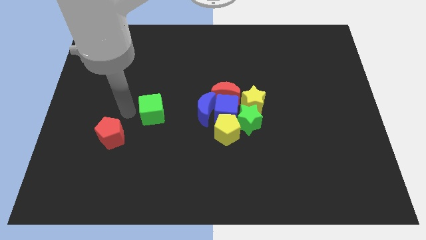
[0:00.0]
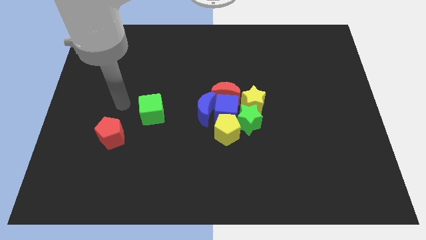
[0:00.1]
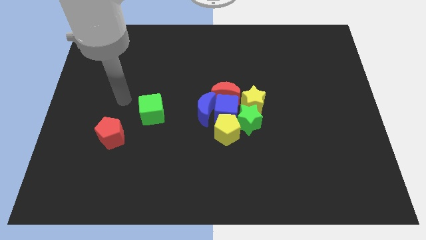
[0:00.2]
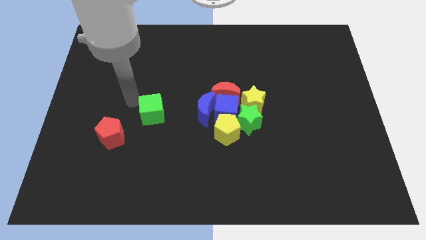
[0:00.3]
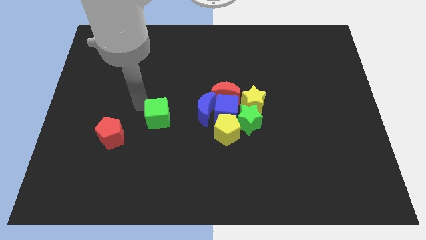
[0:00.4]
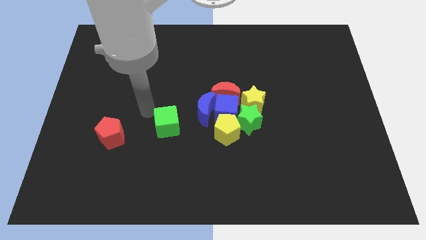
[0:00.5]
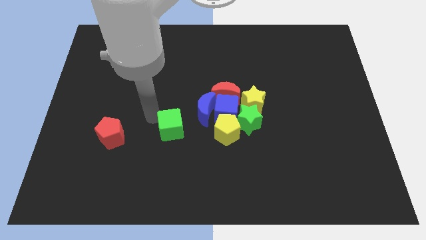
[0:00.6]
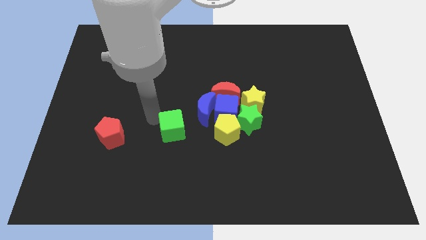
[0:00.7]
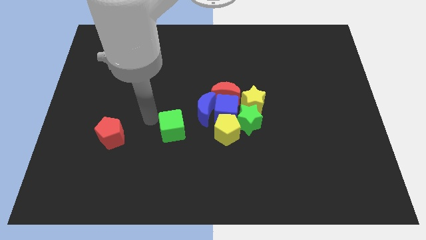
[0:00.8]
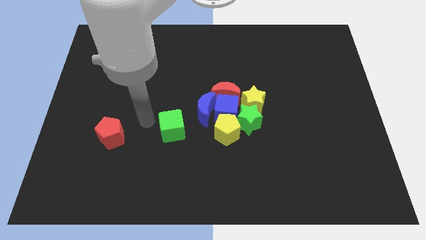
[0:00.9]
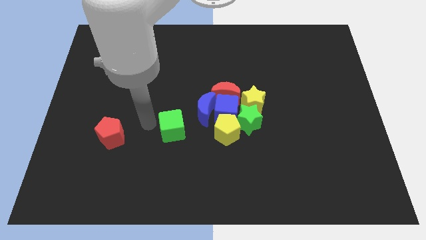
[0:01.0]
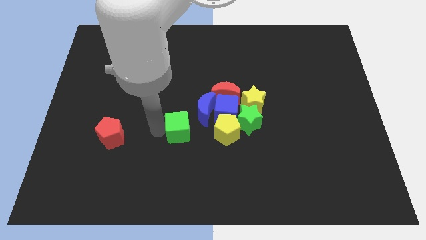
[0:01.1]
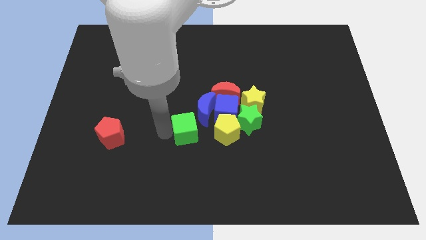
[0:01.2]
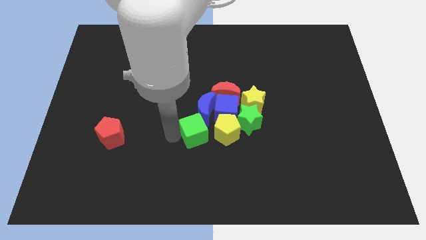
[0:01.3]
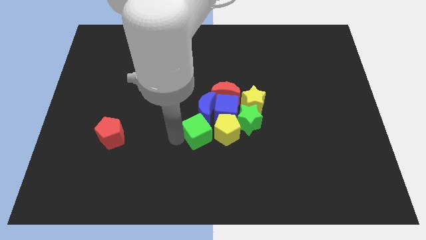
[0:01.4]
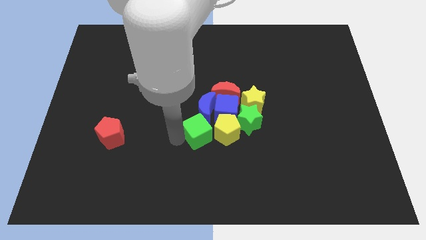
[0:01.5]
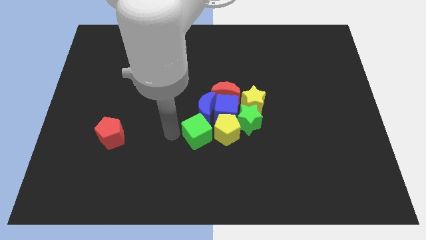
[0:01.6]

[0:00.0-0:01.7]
push the green cube left to the yellow pentagon

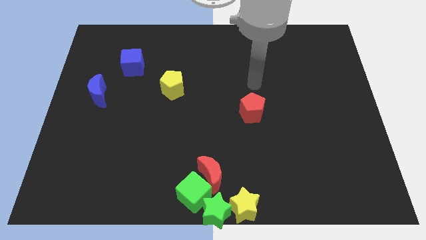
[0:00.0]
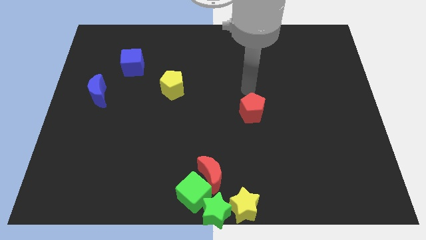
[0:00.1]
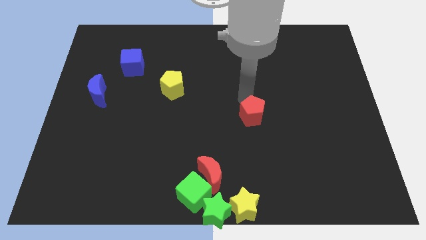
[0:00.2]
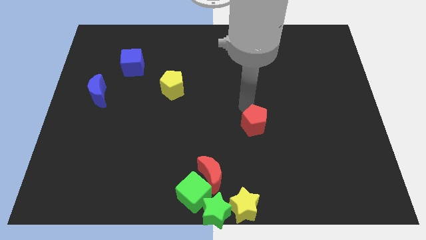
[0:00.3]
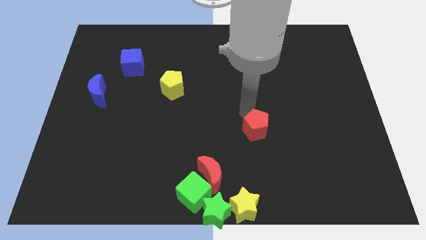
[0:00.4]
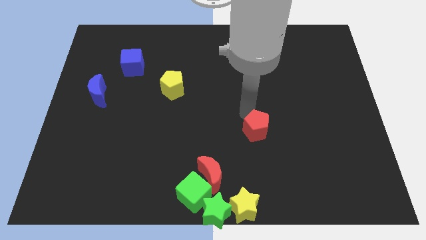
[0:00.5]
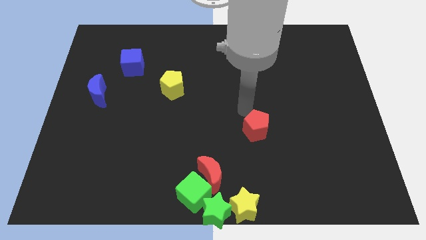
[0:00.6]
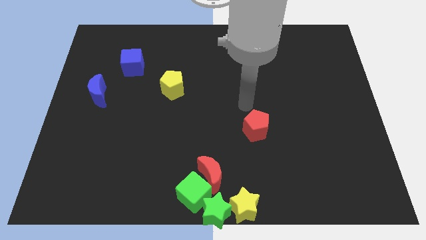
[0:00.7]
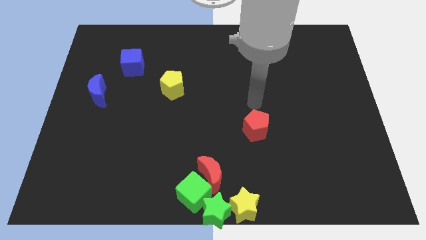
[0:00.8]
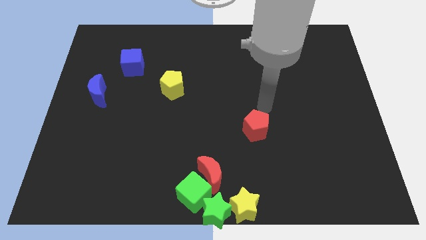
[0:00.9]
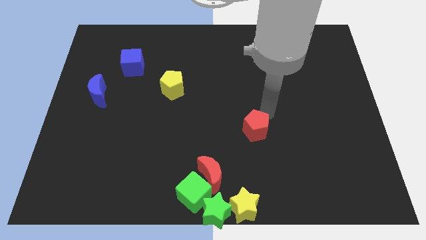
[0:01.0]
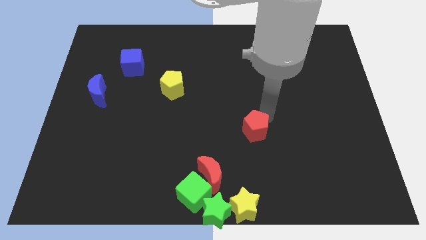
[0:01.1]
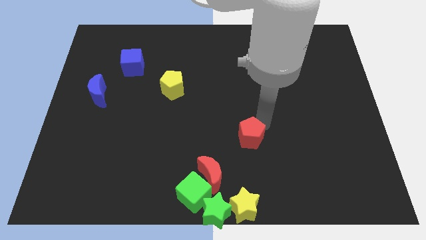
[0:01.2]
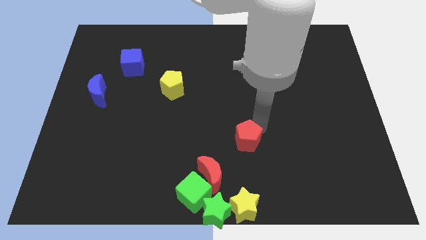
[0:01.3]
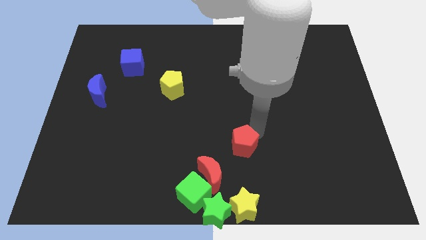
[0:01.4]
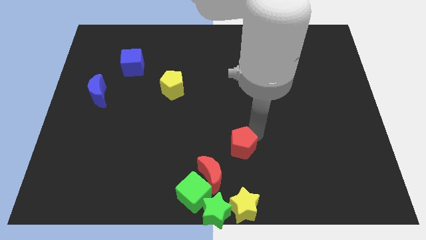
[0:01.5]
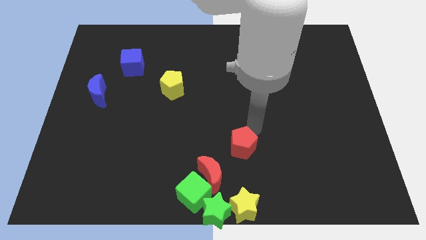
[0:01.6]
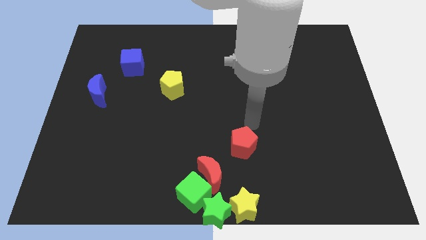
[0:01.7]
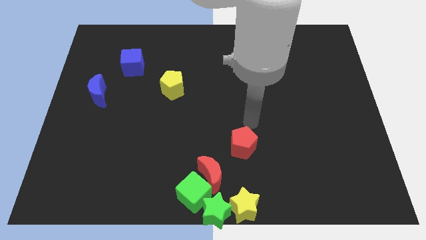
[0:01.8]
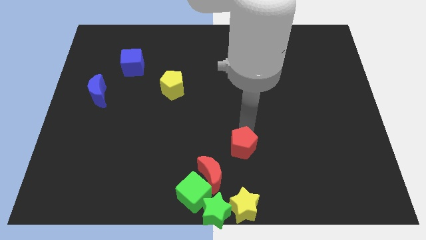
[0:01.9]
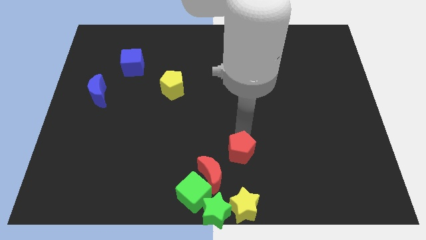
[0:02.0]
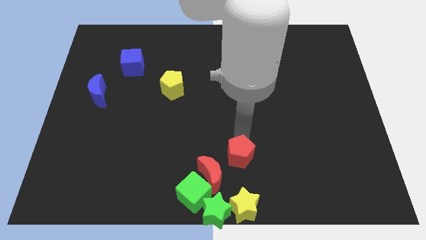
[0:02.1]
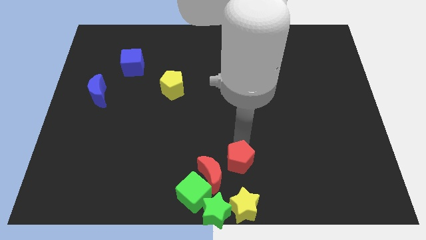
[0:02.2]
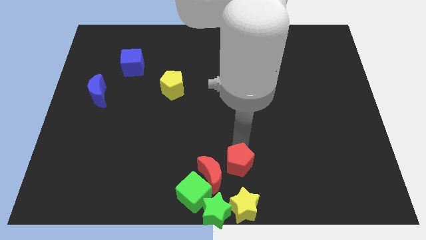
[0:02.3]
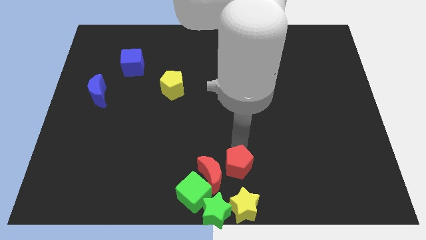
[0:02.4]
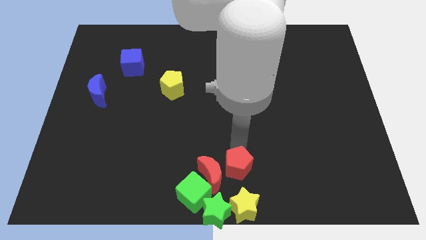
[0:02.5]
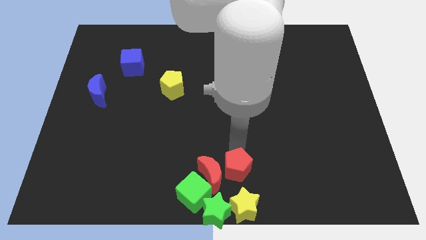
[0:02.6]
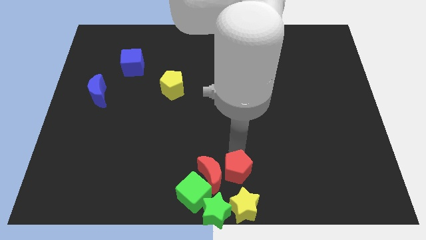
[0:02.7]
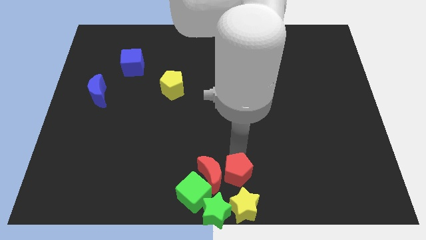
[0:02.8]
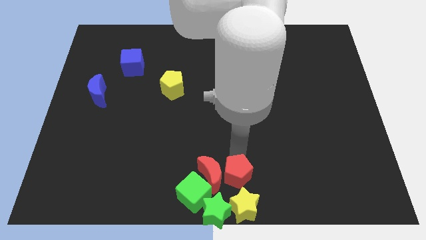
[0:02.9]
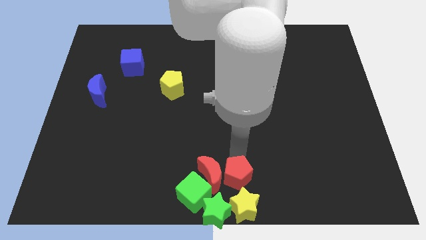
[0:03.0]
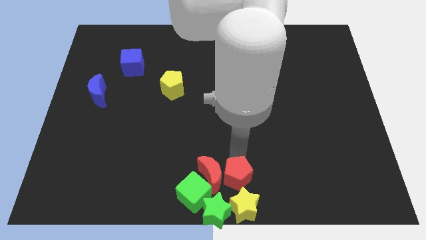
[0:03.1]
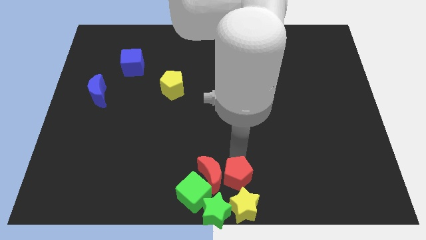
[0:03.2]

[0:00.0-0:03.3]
move the red pentagon to the right of the red crescent

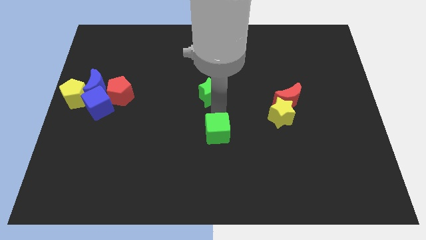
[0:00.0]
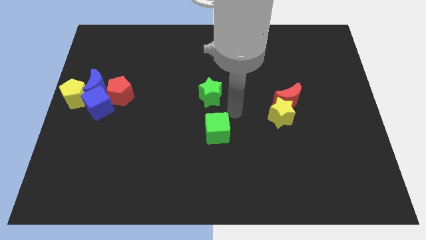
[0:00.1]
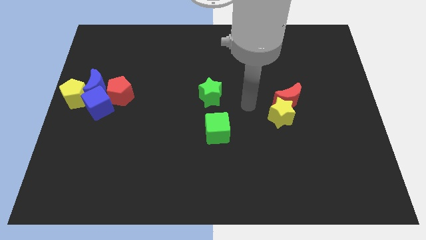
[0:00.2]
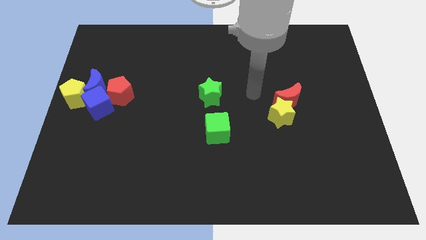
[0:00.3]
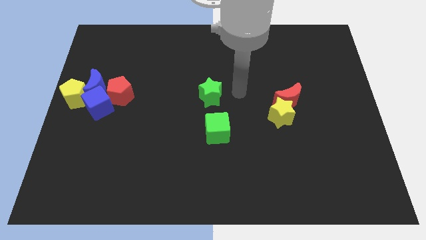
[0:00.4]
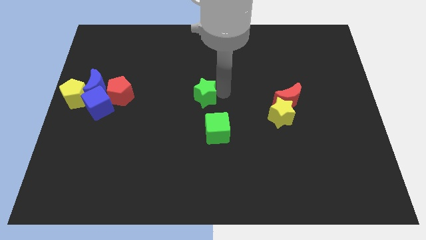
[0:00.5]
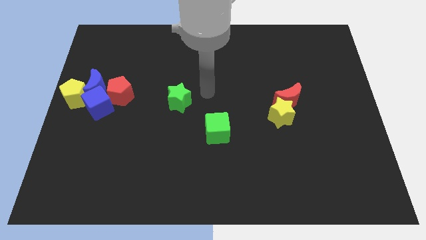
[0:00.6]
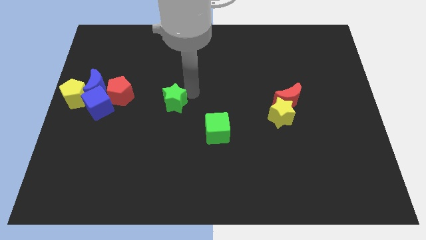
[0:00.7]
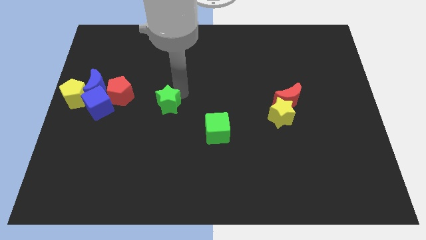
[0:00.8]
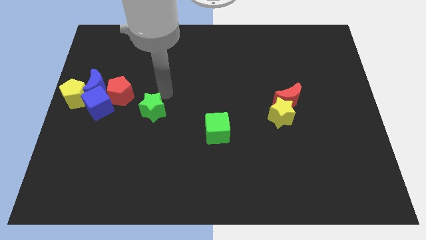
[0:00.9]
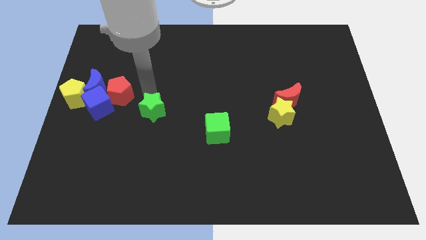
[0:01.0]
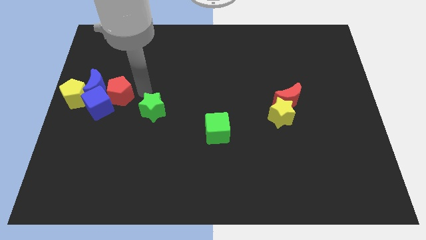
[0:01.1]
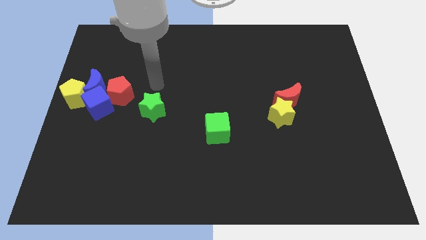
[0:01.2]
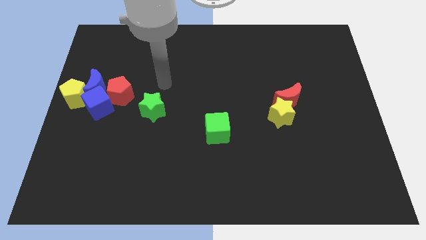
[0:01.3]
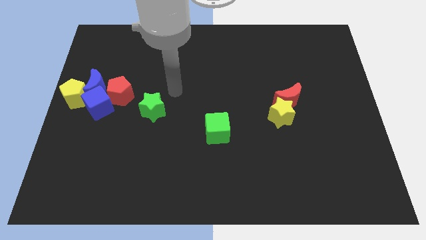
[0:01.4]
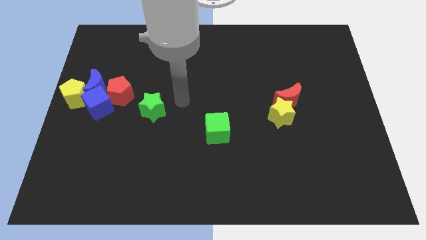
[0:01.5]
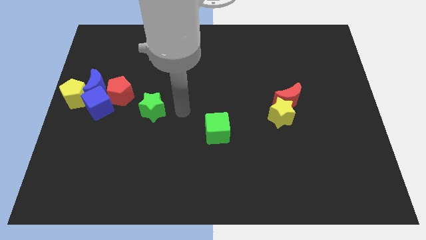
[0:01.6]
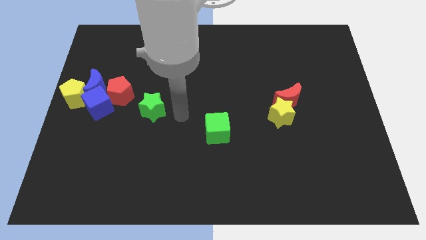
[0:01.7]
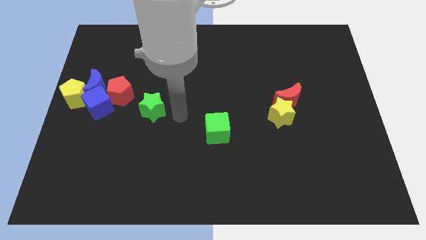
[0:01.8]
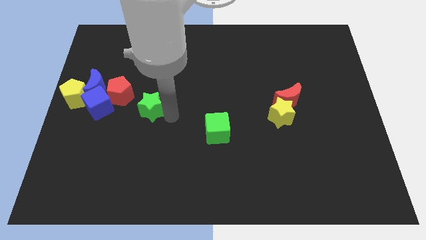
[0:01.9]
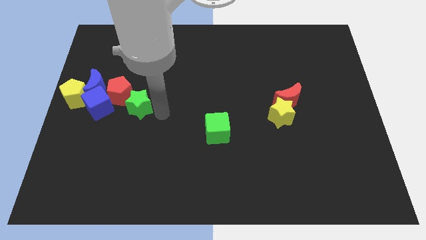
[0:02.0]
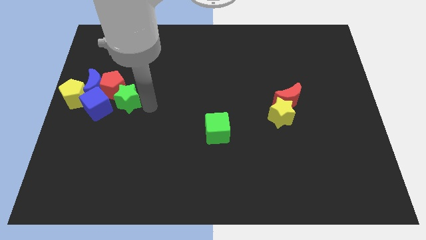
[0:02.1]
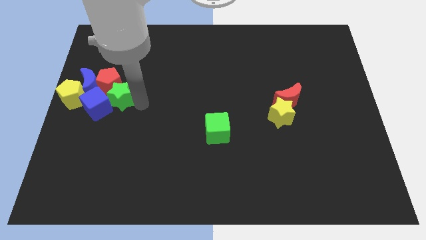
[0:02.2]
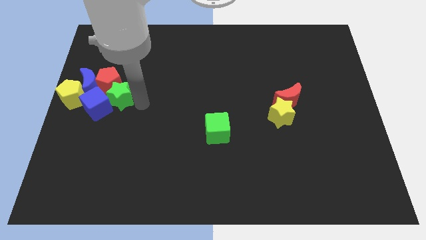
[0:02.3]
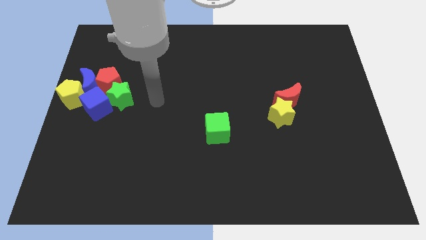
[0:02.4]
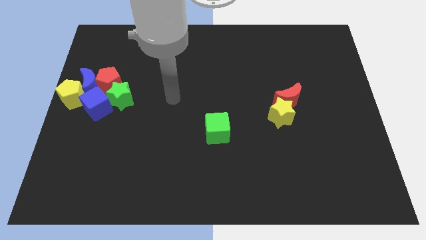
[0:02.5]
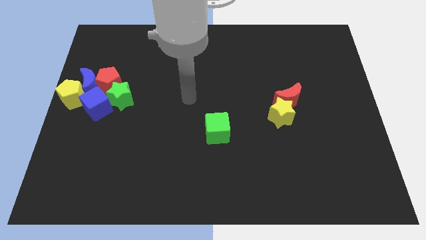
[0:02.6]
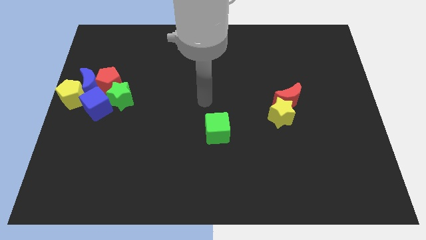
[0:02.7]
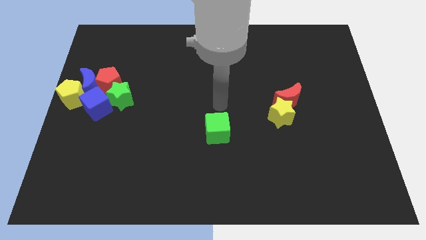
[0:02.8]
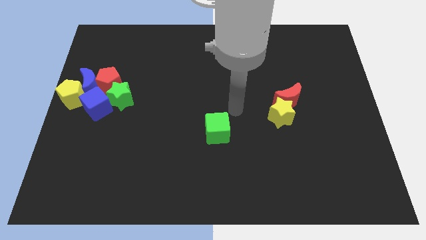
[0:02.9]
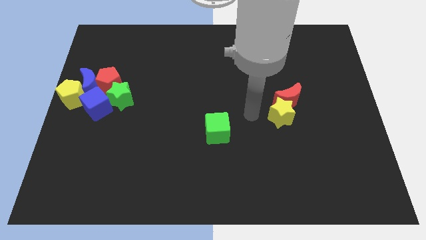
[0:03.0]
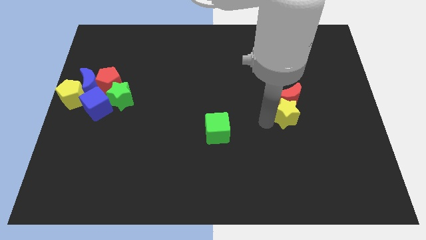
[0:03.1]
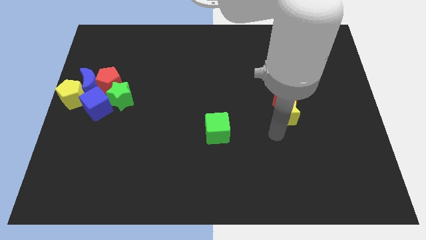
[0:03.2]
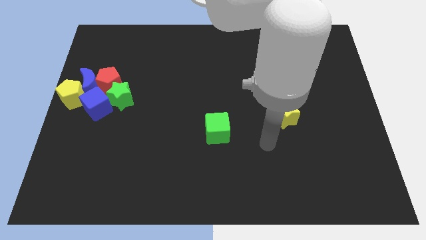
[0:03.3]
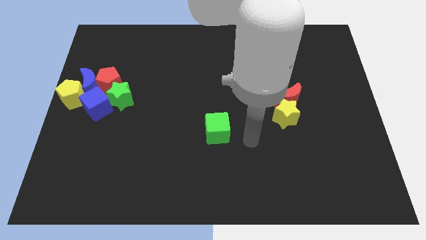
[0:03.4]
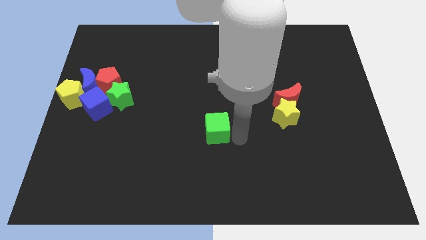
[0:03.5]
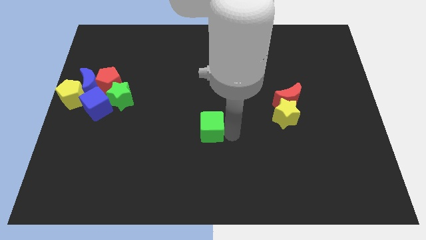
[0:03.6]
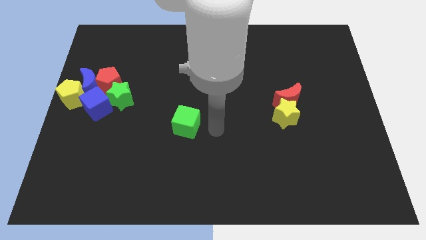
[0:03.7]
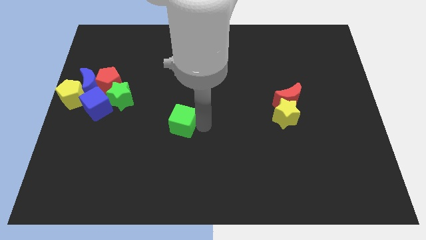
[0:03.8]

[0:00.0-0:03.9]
push the green star into the red pentagon
